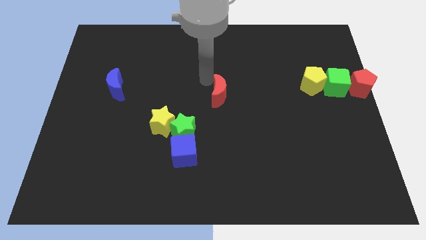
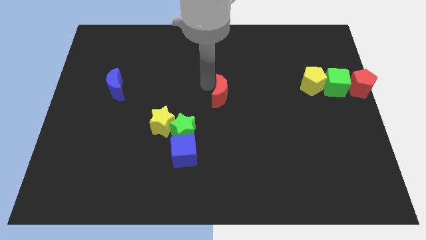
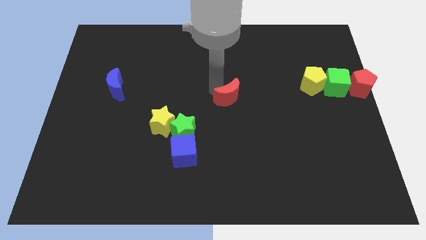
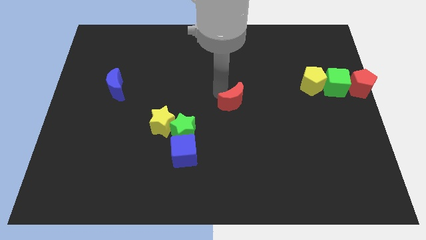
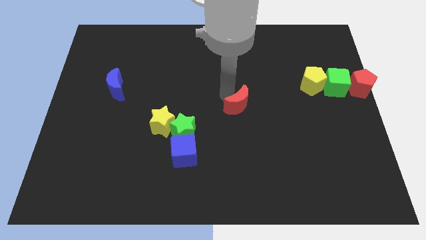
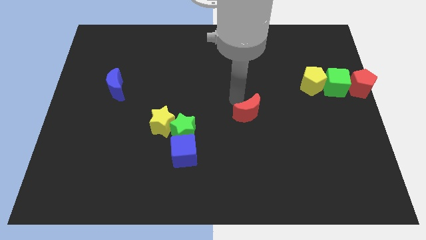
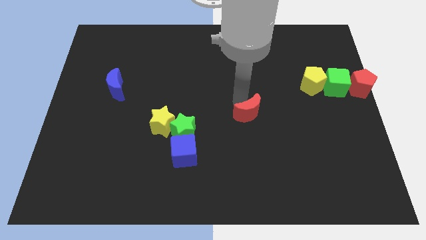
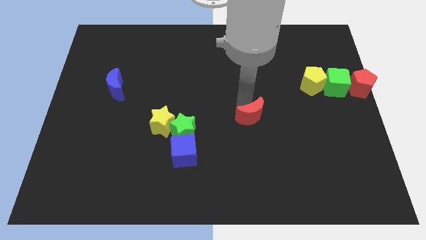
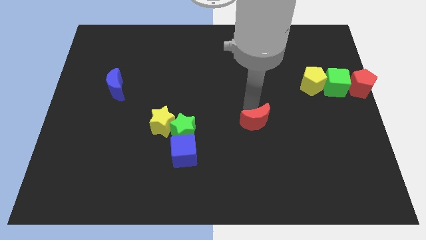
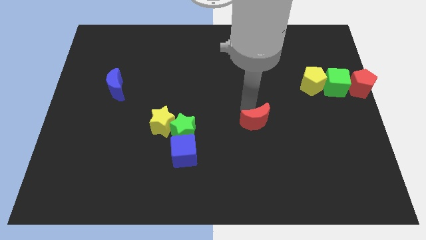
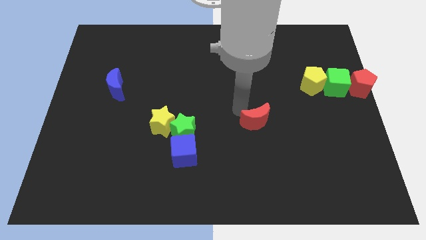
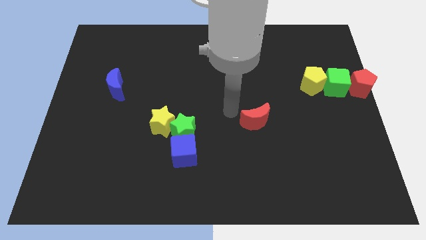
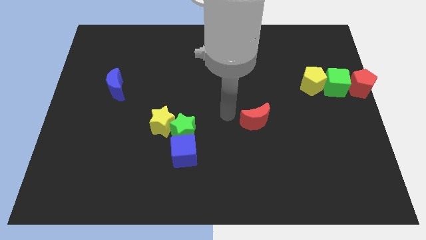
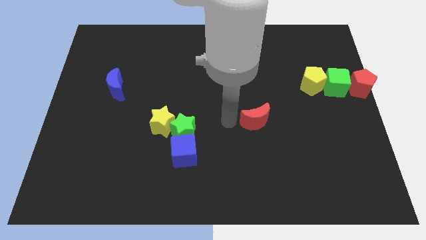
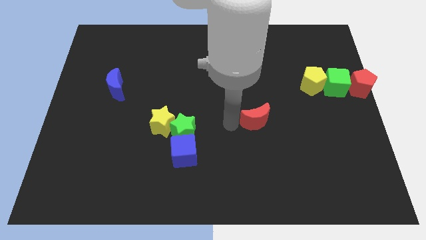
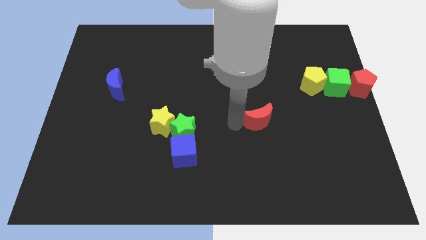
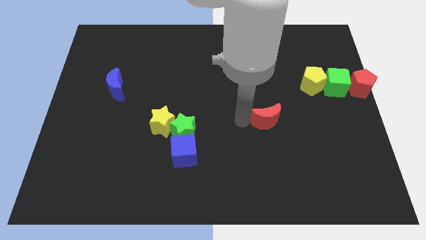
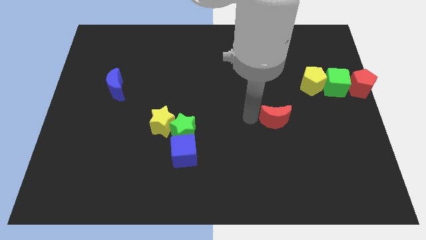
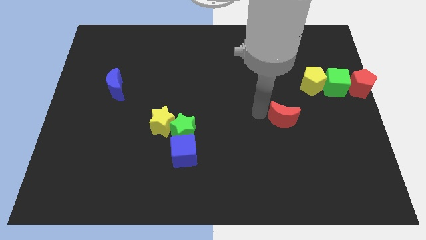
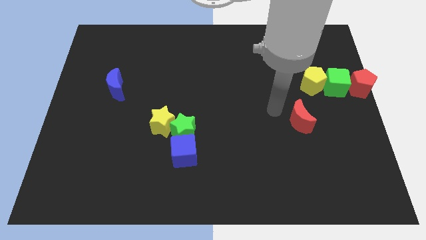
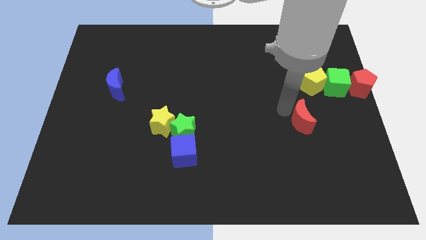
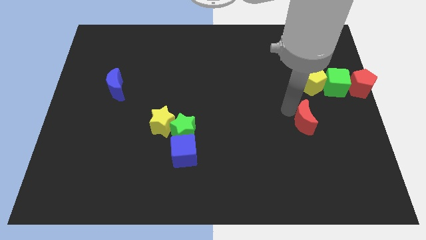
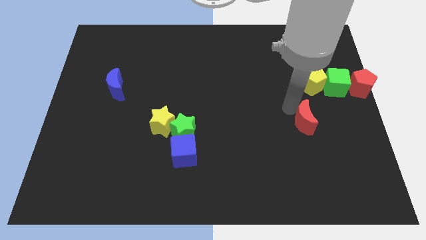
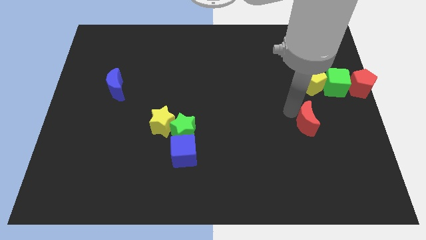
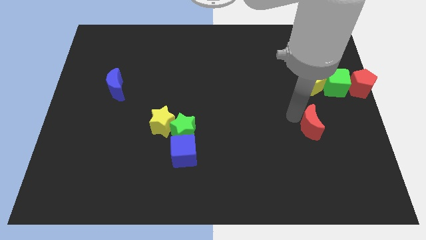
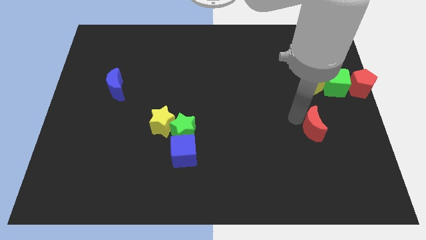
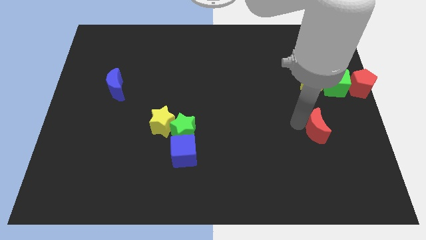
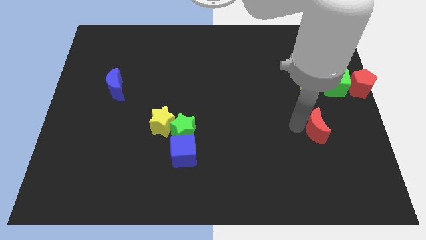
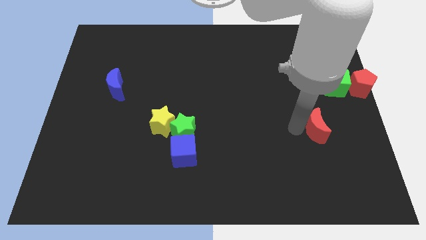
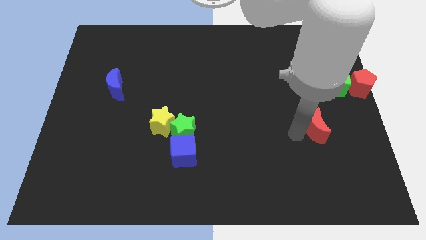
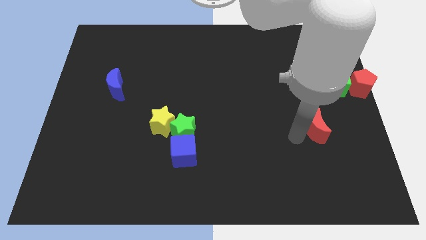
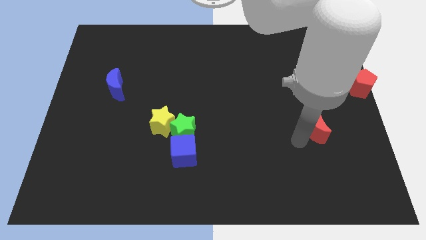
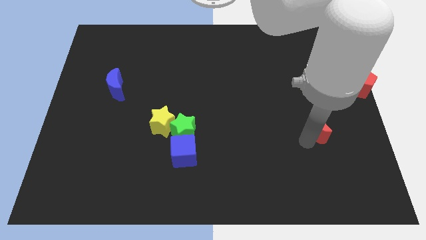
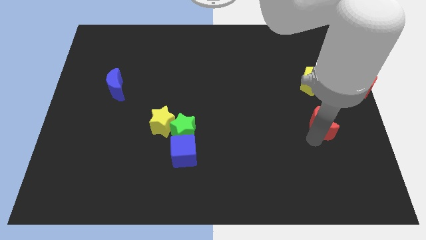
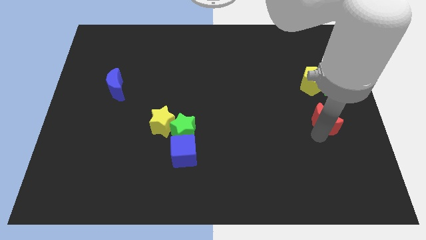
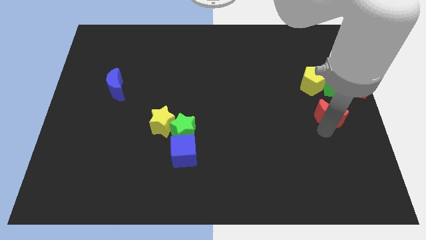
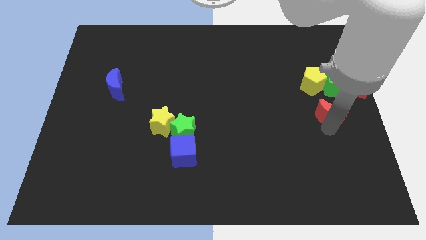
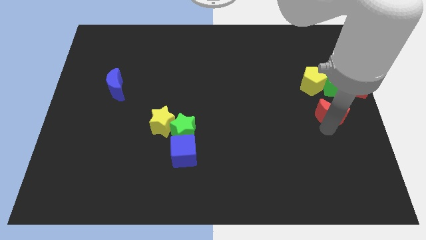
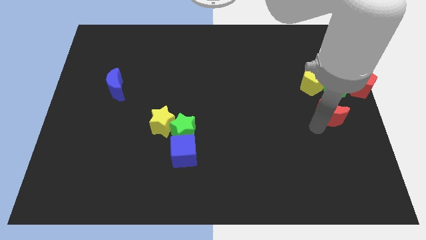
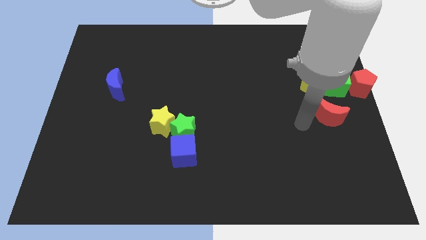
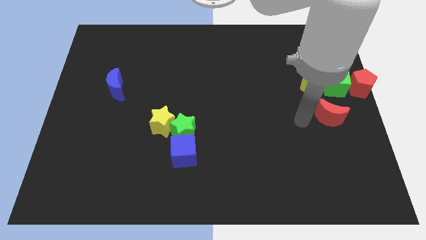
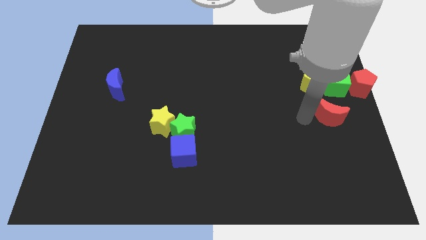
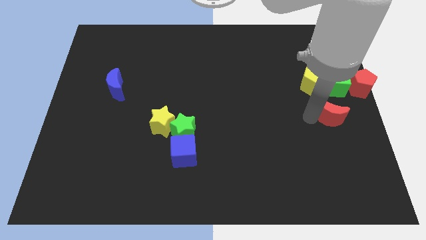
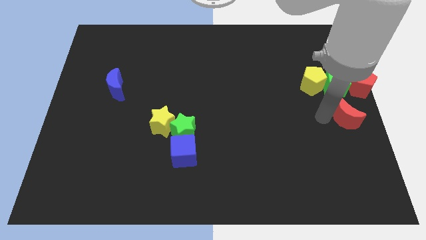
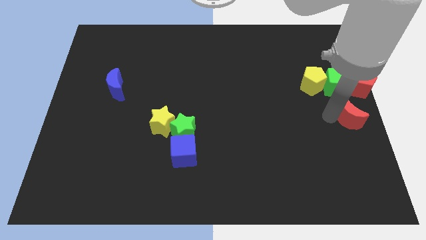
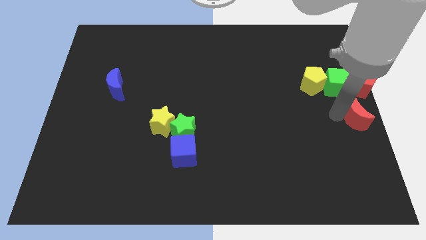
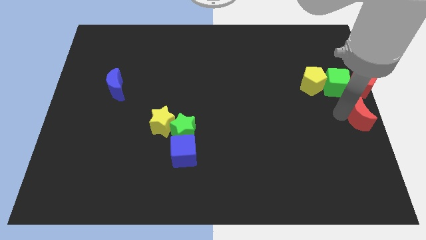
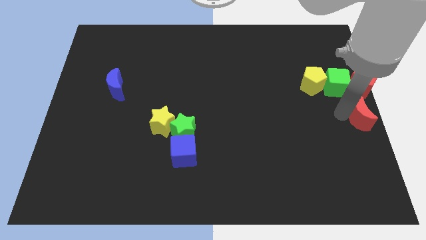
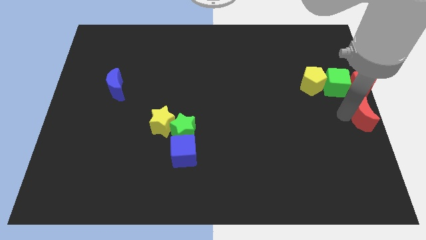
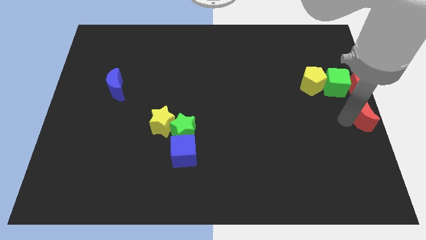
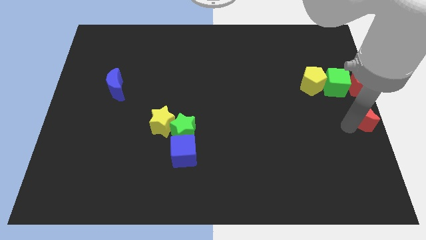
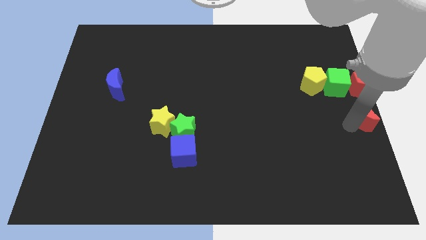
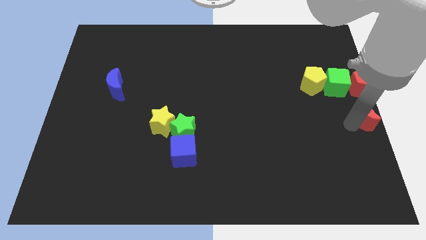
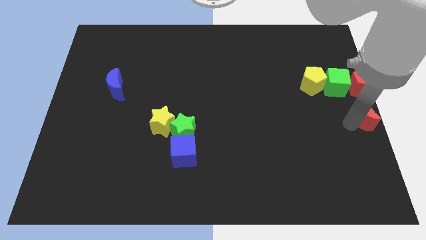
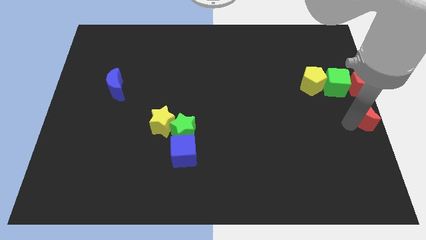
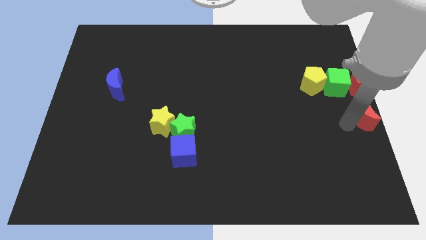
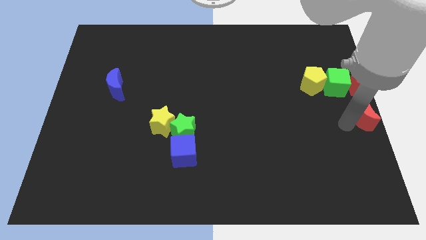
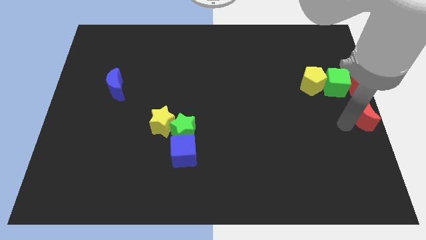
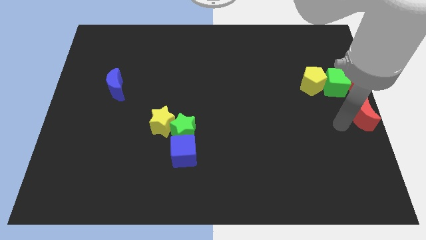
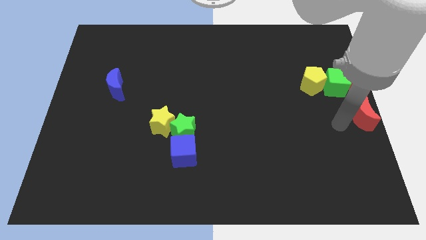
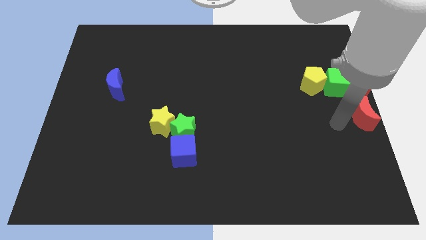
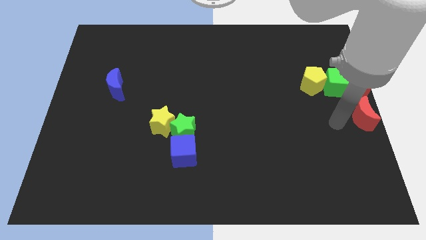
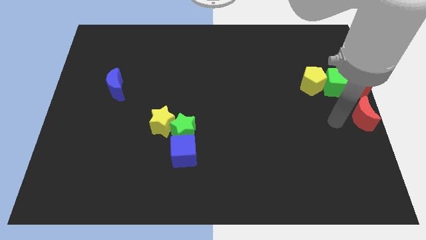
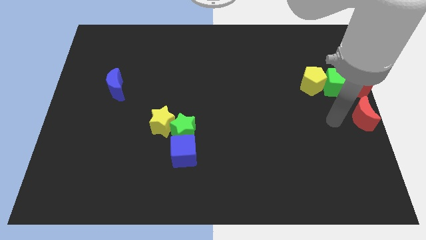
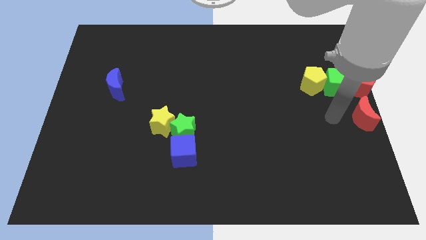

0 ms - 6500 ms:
place the red crescent to the center right of the board

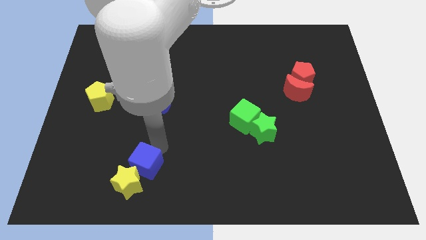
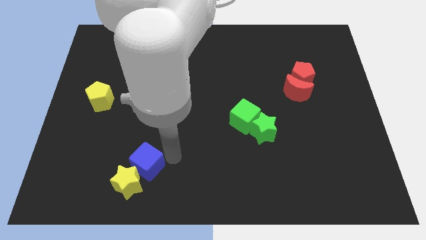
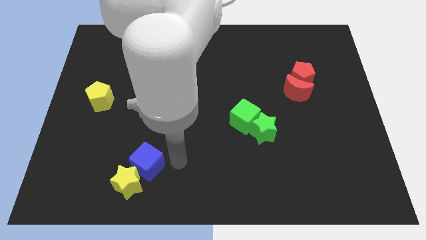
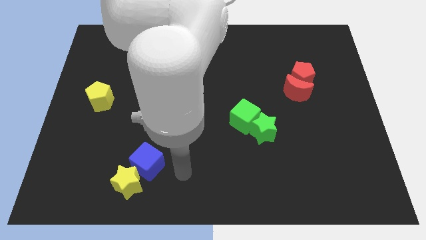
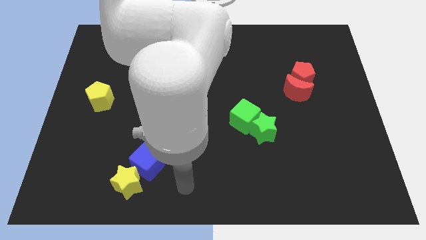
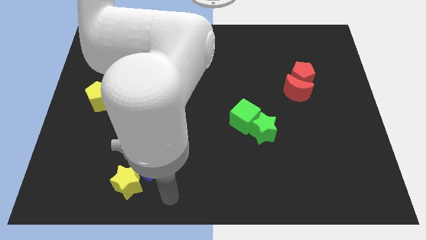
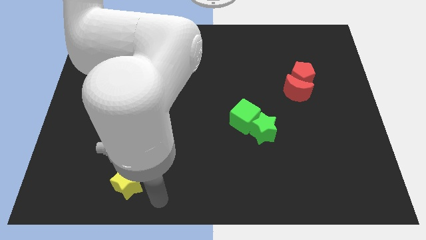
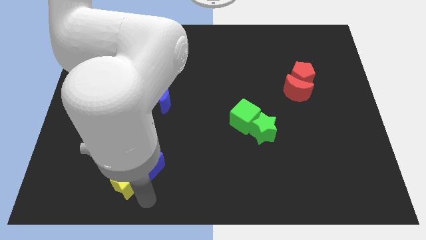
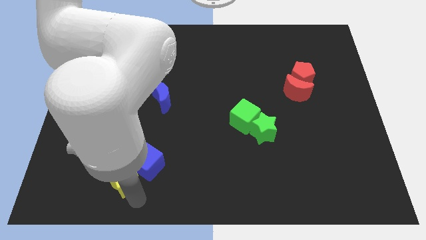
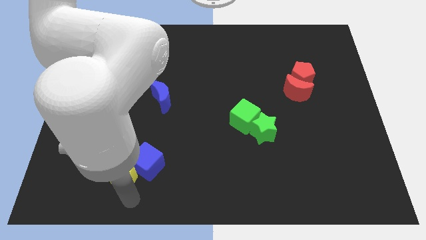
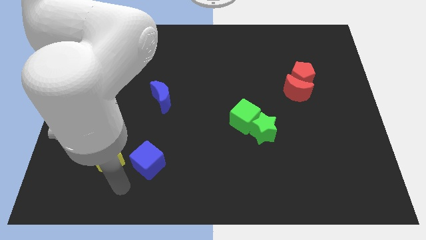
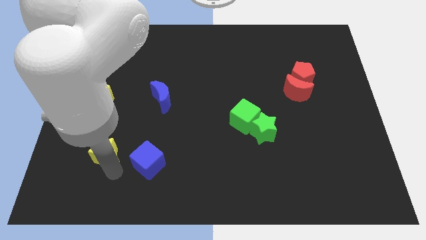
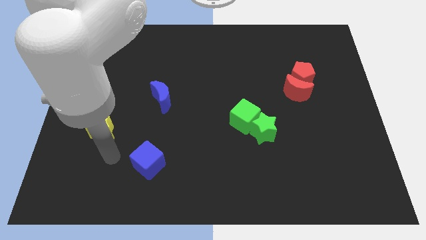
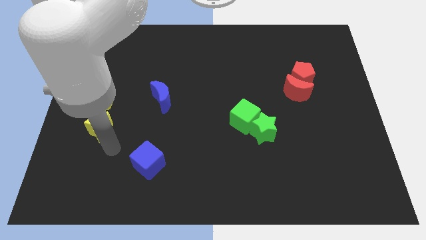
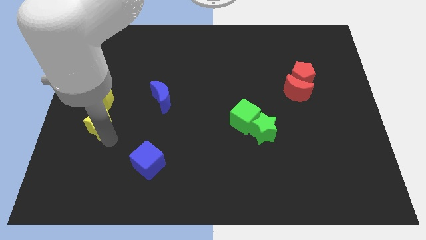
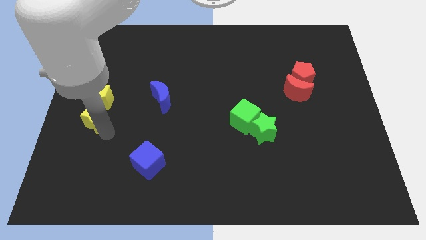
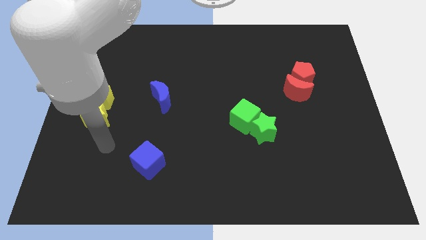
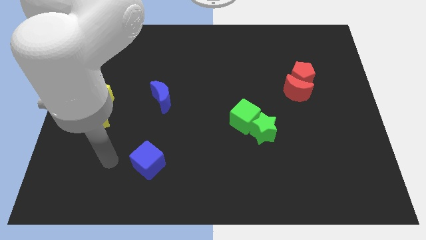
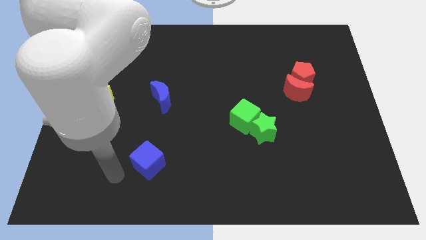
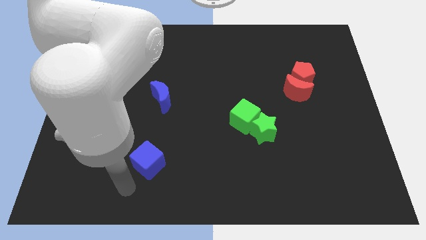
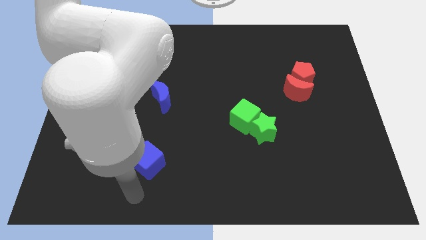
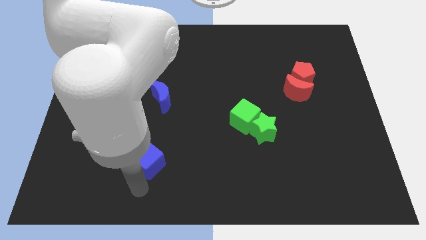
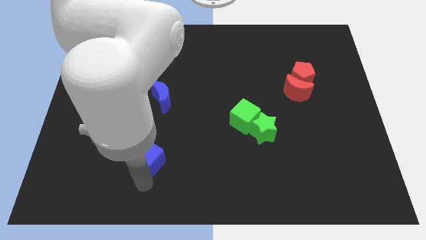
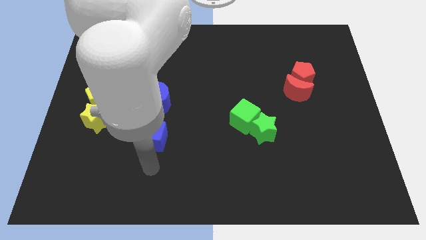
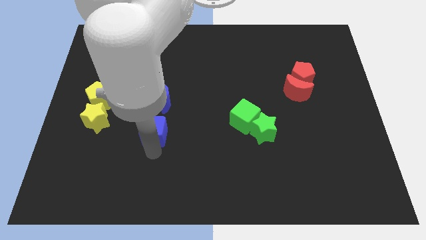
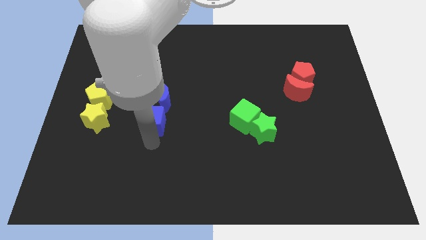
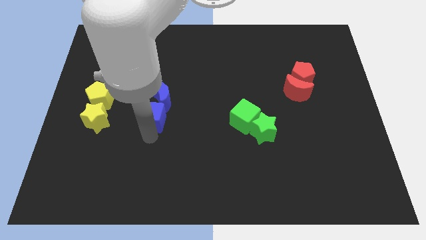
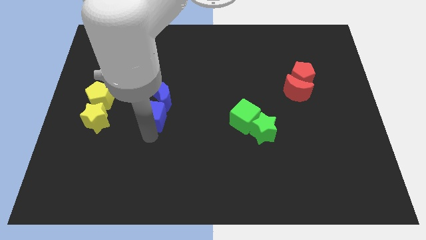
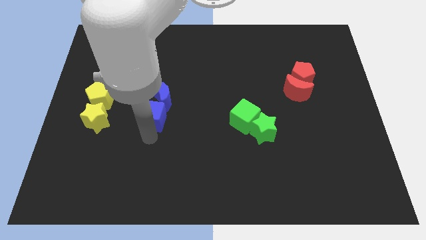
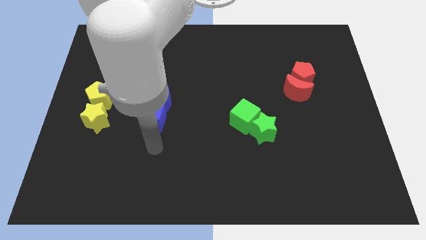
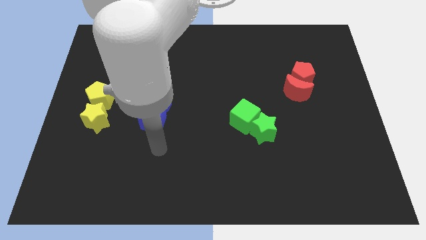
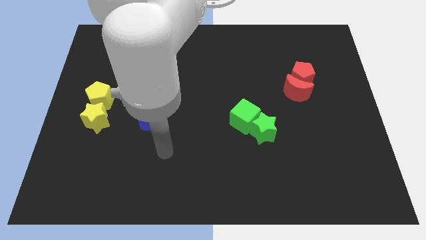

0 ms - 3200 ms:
separate the yellow blocks and blue blocks
